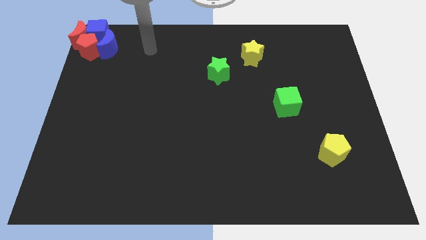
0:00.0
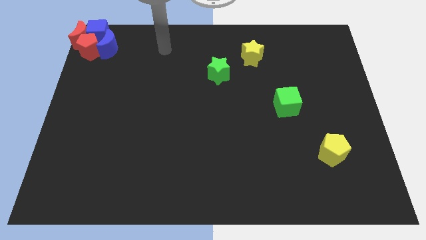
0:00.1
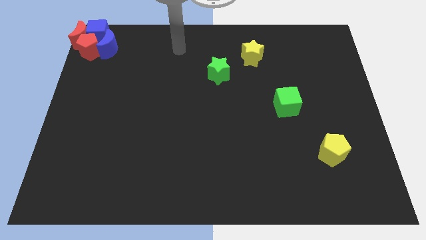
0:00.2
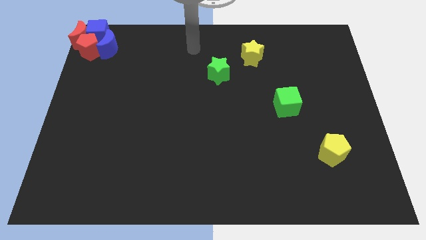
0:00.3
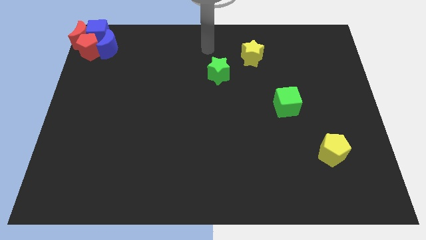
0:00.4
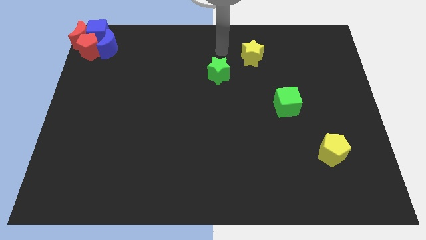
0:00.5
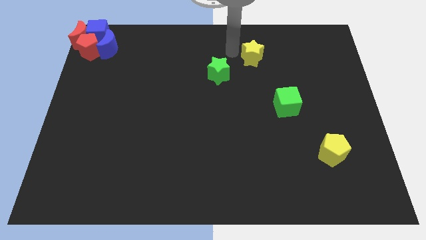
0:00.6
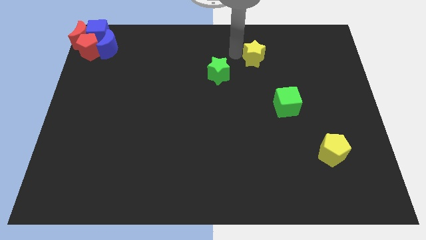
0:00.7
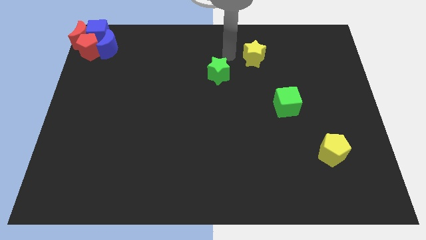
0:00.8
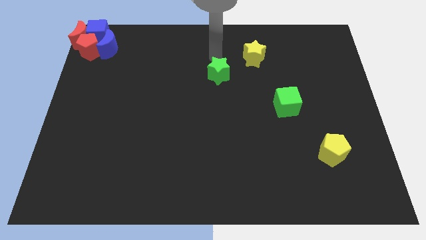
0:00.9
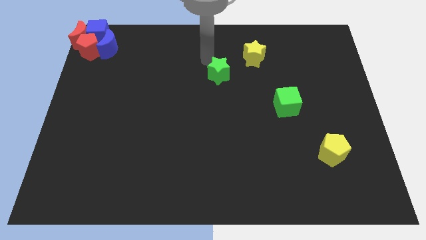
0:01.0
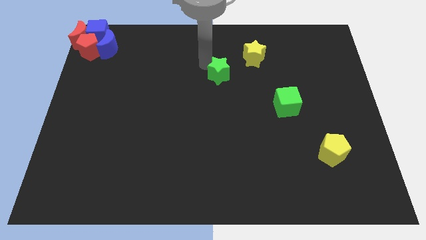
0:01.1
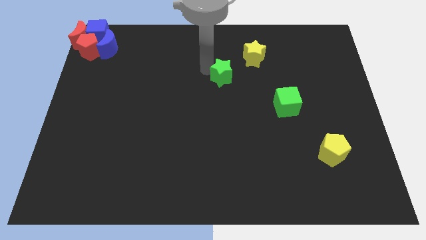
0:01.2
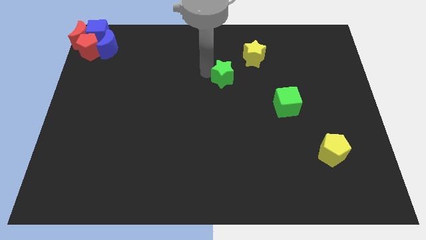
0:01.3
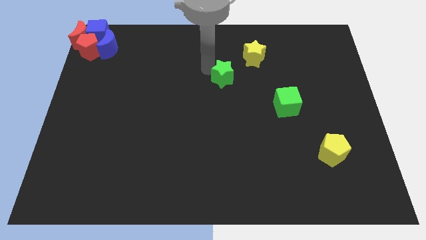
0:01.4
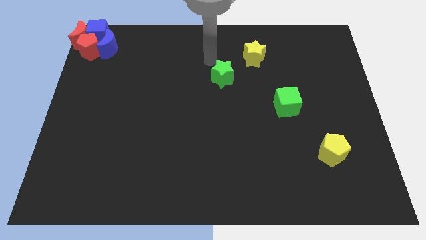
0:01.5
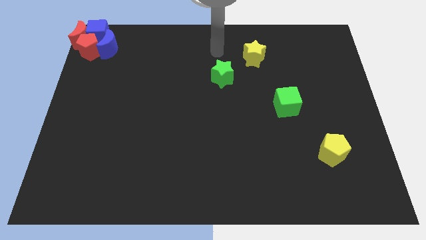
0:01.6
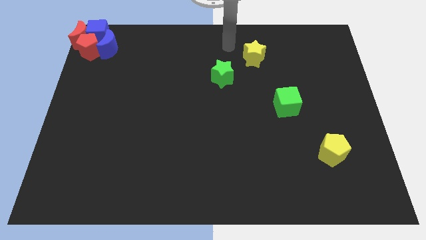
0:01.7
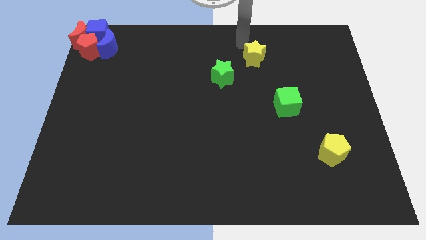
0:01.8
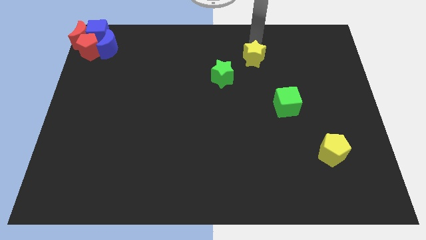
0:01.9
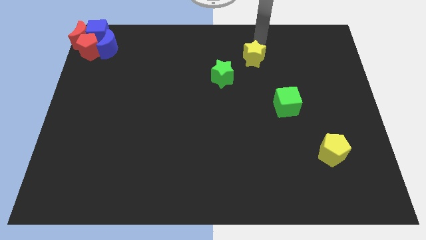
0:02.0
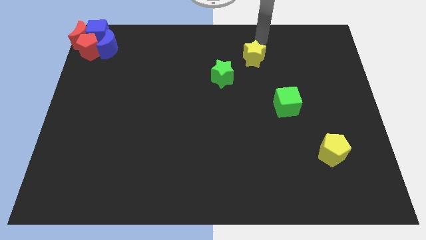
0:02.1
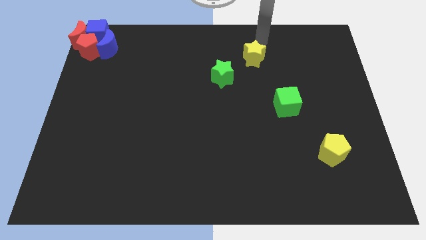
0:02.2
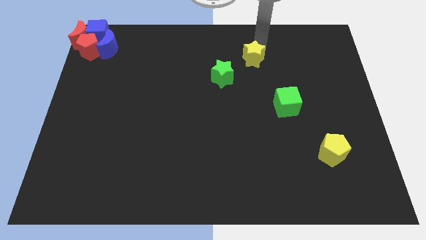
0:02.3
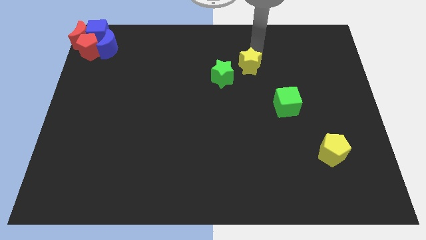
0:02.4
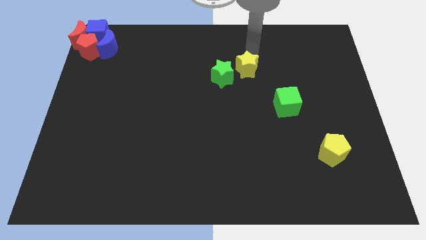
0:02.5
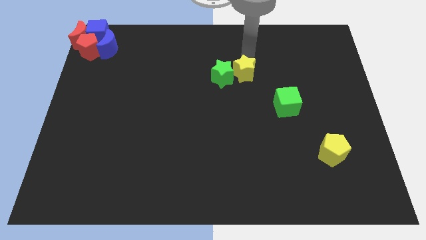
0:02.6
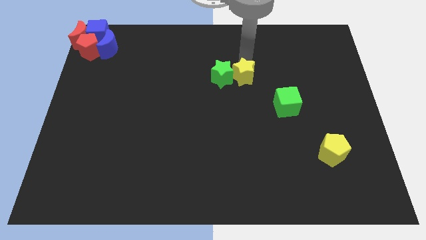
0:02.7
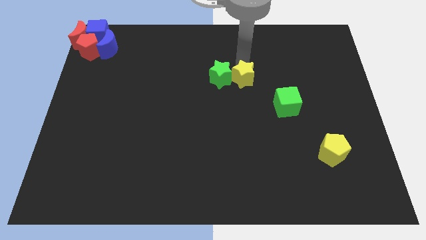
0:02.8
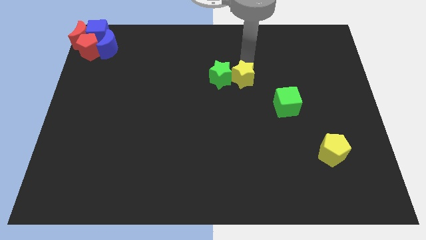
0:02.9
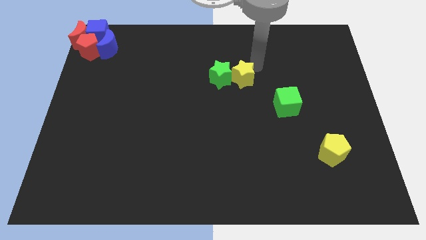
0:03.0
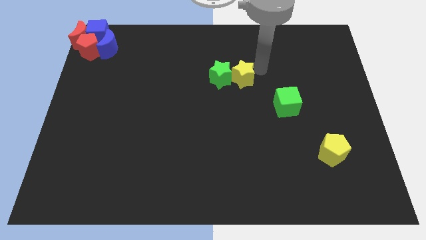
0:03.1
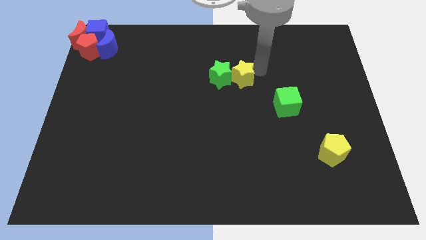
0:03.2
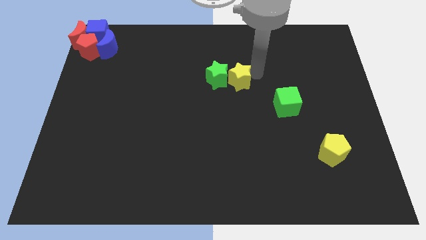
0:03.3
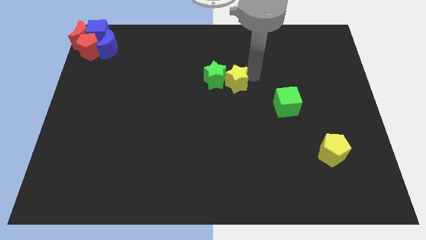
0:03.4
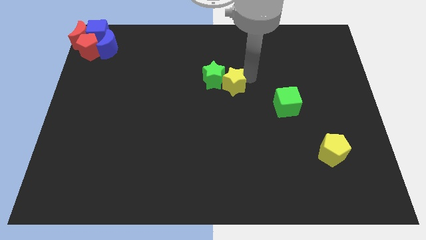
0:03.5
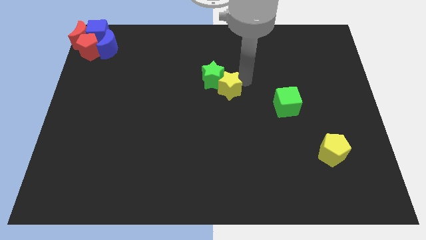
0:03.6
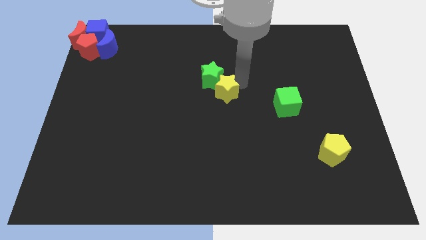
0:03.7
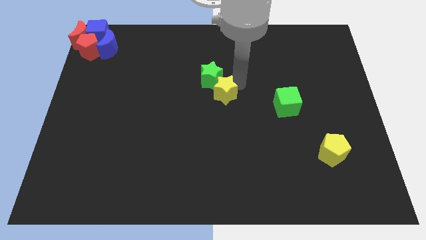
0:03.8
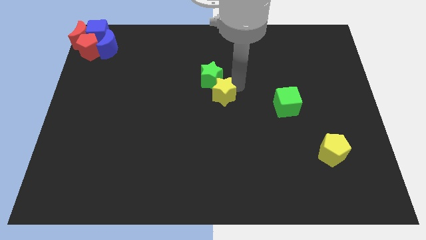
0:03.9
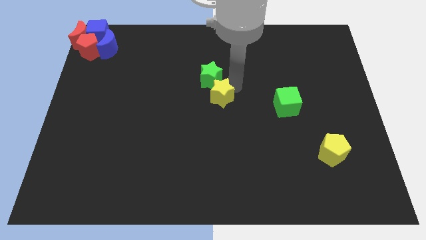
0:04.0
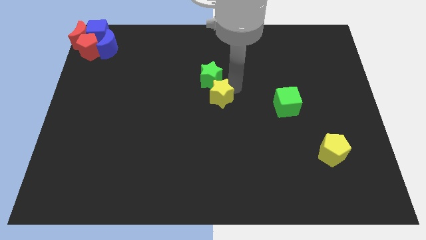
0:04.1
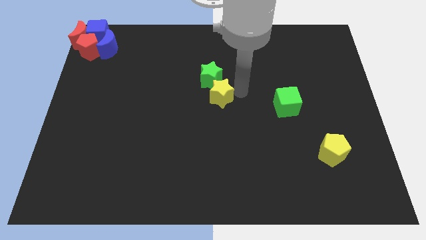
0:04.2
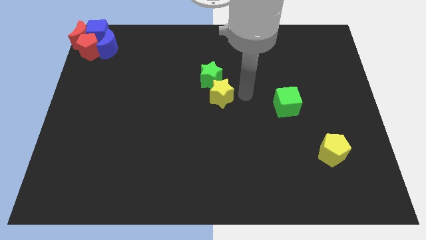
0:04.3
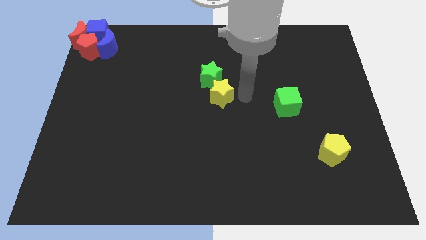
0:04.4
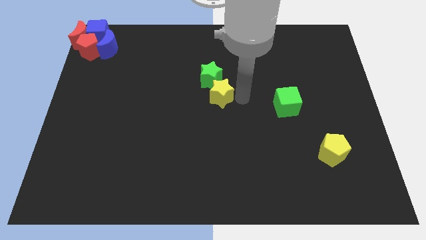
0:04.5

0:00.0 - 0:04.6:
move stars to the center of the board

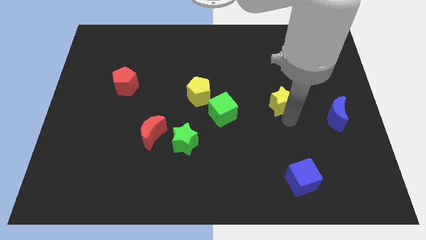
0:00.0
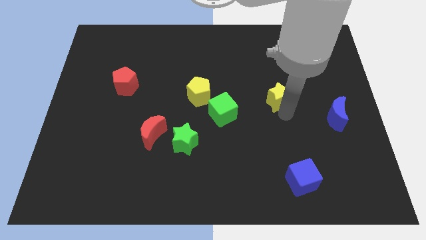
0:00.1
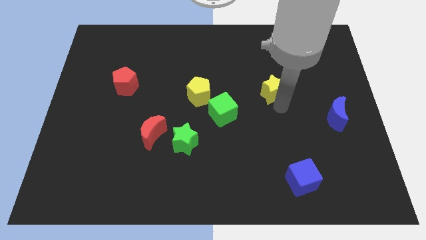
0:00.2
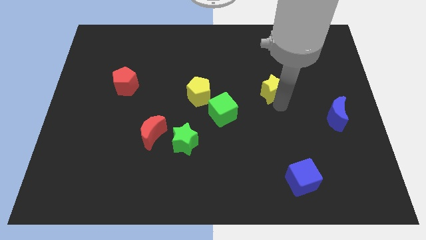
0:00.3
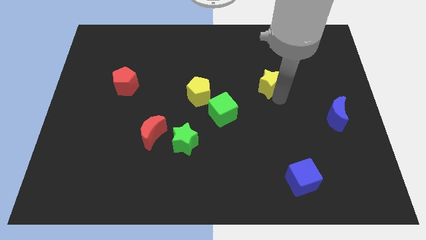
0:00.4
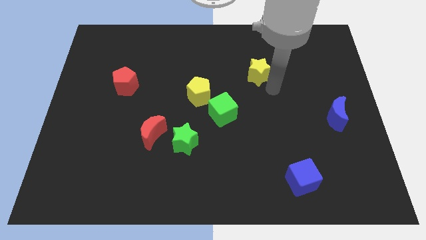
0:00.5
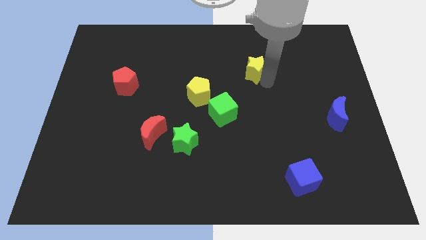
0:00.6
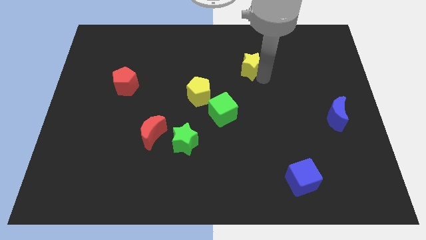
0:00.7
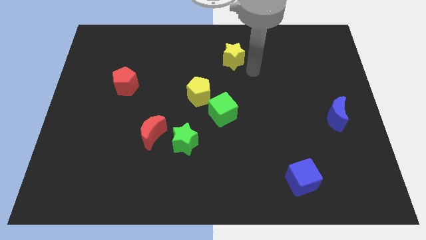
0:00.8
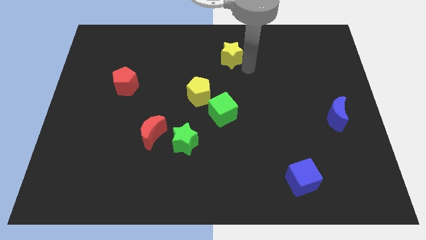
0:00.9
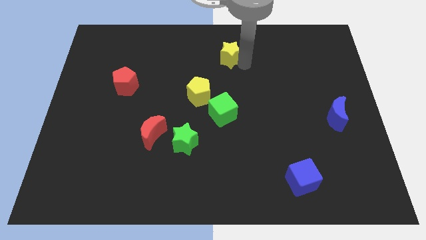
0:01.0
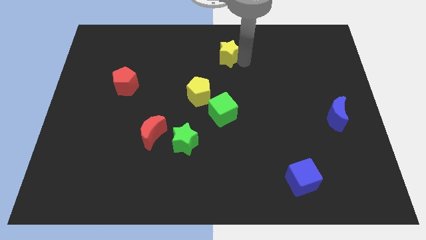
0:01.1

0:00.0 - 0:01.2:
place the yellow star diagonally to the yellow pentagon

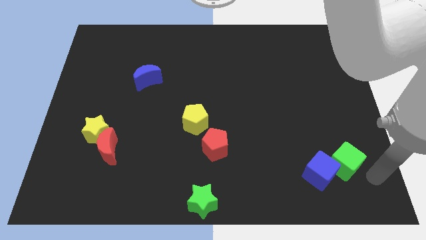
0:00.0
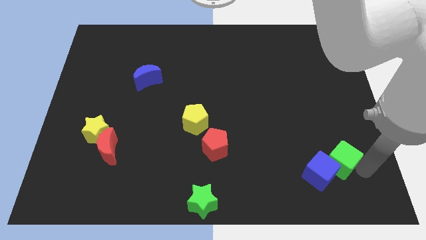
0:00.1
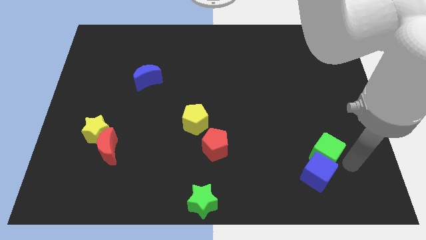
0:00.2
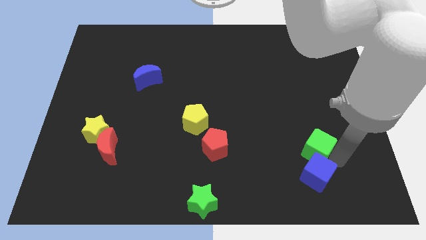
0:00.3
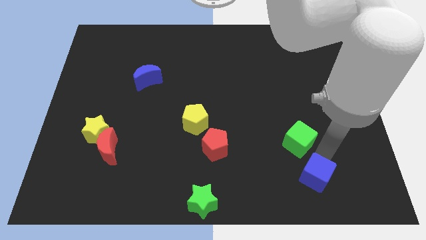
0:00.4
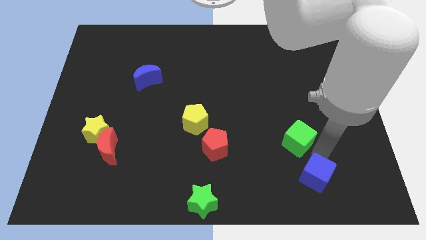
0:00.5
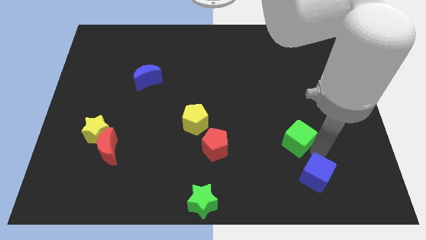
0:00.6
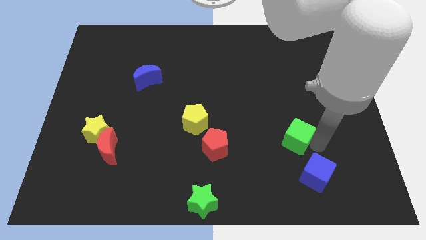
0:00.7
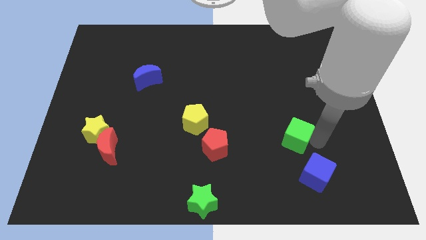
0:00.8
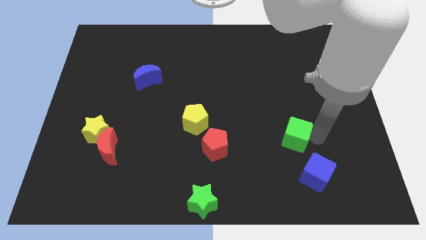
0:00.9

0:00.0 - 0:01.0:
move the green cube above the blue cube

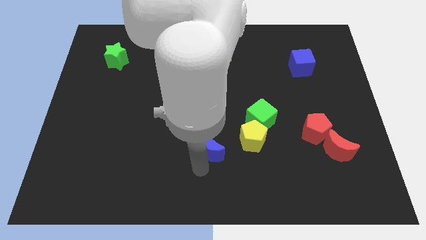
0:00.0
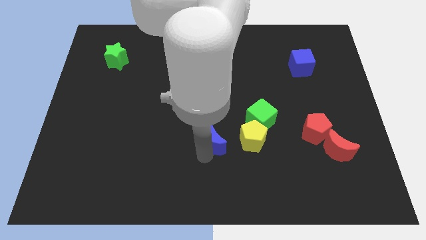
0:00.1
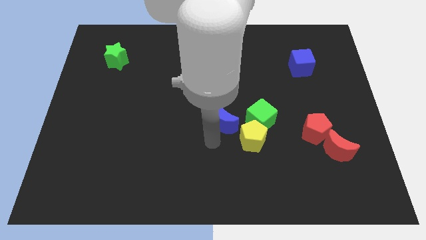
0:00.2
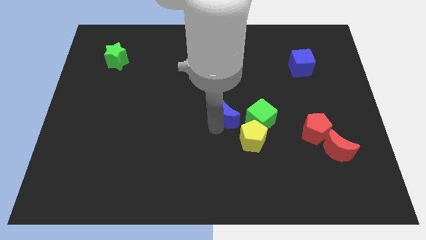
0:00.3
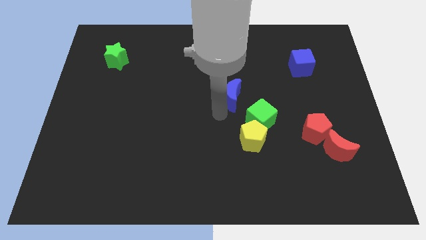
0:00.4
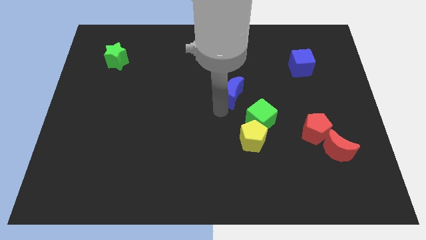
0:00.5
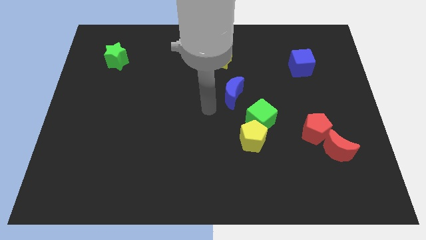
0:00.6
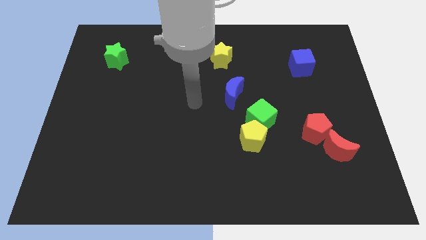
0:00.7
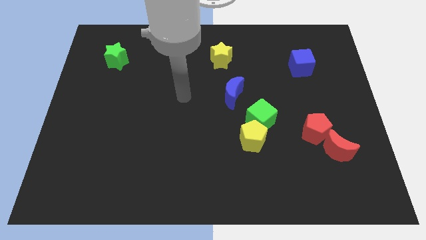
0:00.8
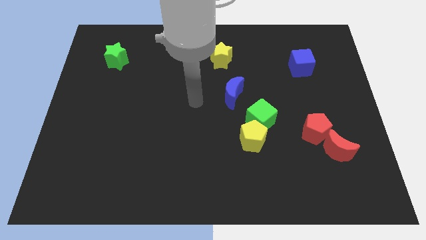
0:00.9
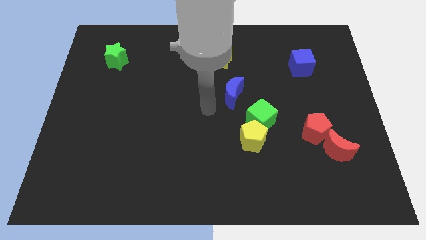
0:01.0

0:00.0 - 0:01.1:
move the blue crescent to the top left of the green cube

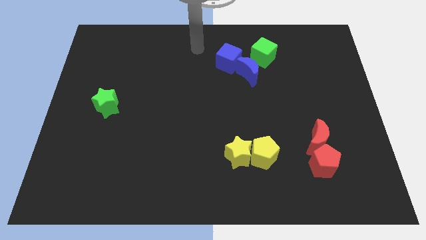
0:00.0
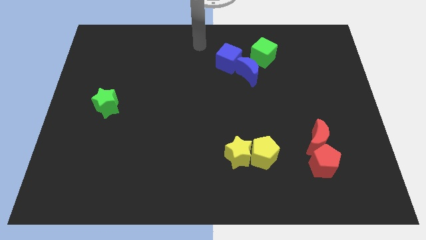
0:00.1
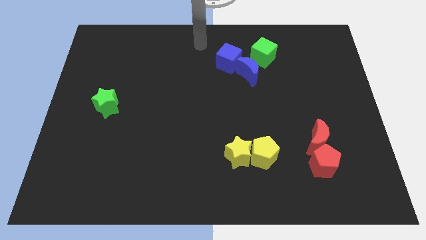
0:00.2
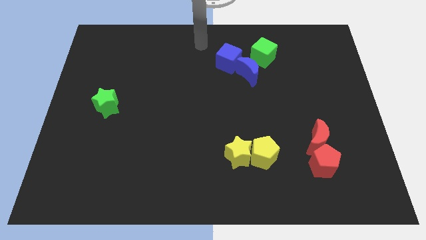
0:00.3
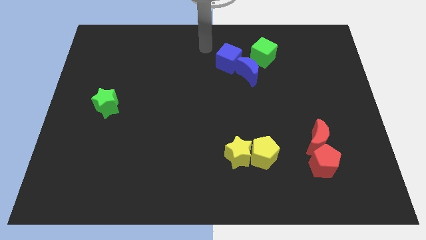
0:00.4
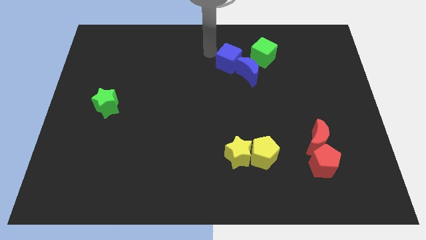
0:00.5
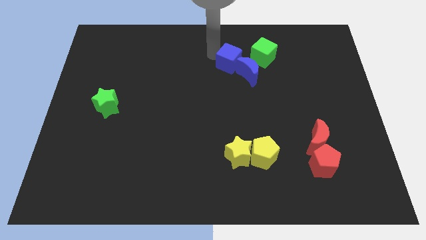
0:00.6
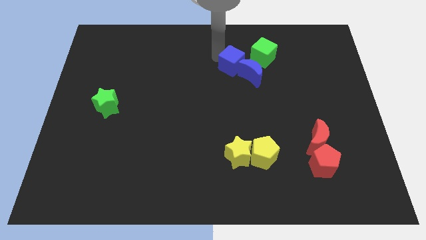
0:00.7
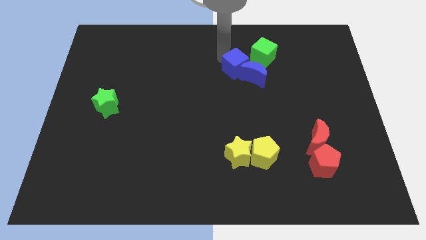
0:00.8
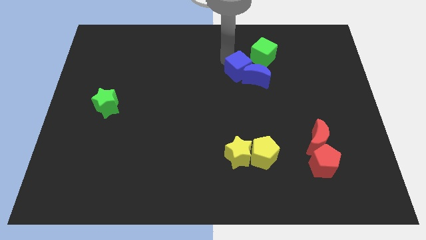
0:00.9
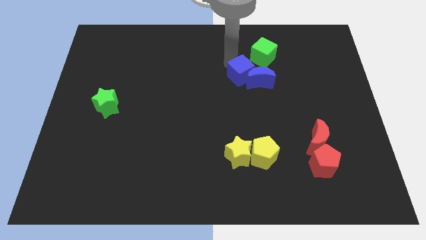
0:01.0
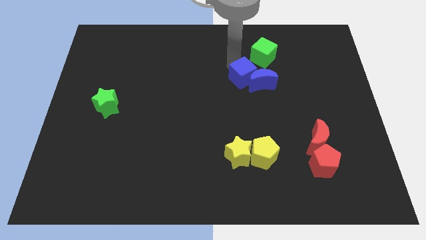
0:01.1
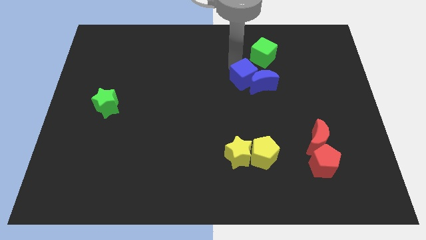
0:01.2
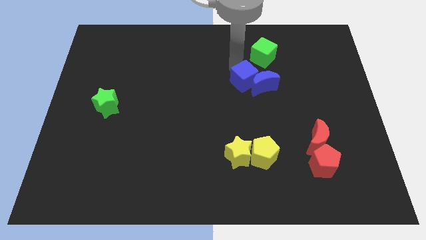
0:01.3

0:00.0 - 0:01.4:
move the blue cube and blue crescent slightly towards down side
